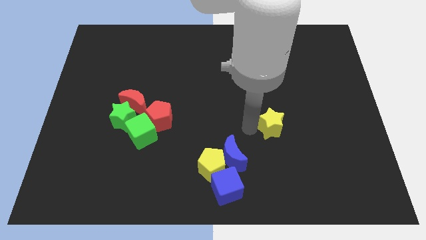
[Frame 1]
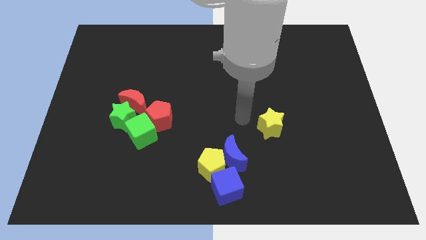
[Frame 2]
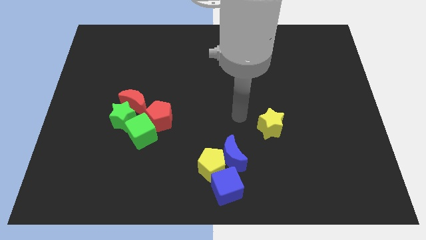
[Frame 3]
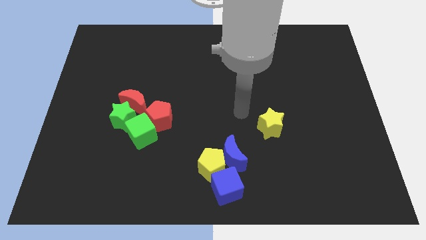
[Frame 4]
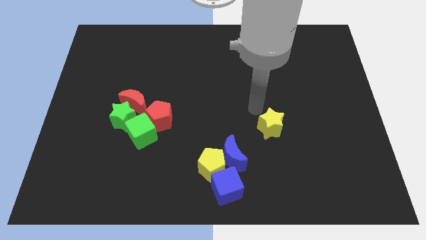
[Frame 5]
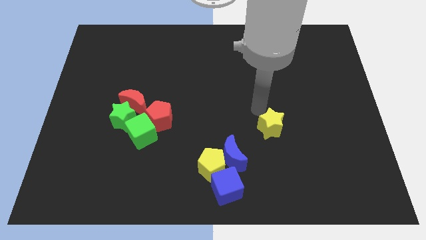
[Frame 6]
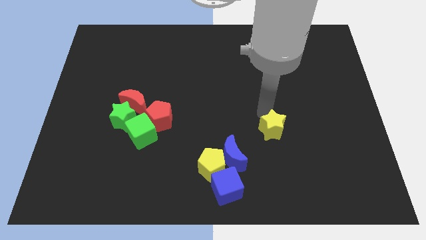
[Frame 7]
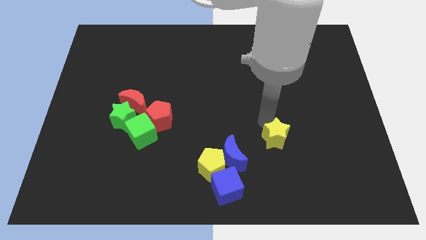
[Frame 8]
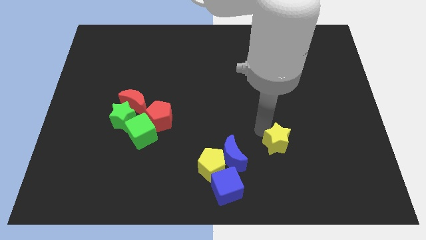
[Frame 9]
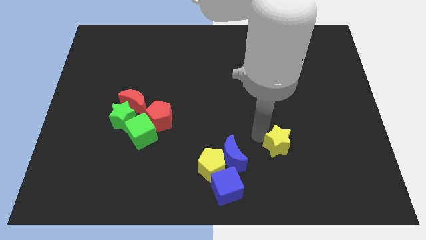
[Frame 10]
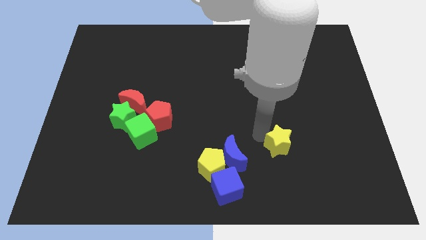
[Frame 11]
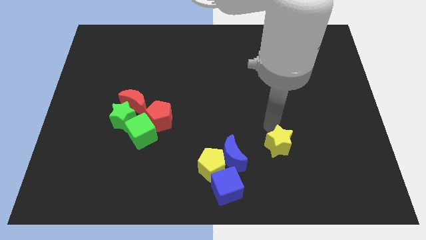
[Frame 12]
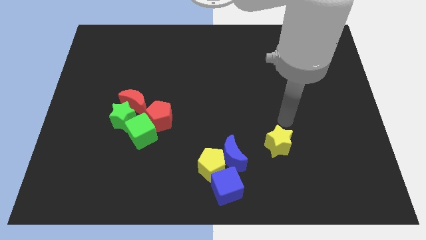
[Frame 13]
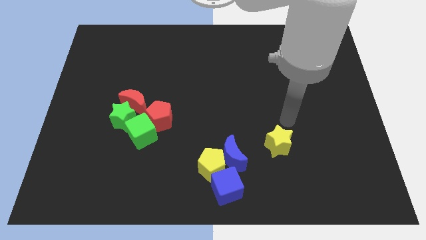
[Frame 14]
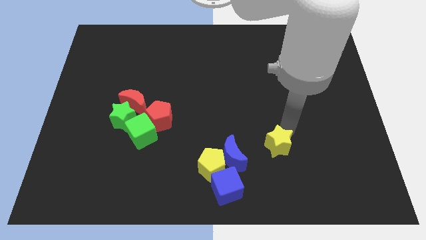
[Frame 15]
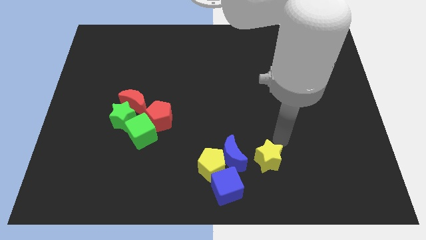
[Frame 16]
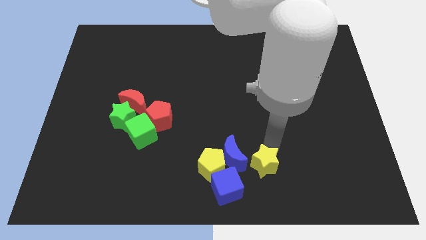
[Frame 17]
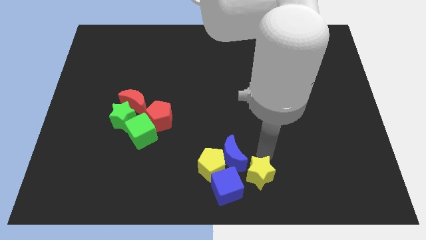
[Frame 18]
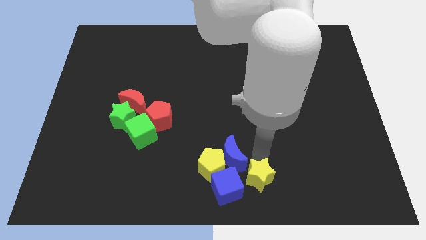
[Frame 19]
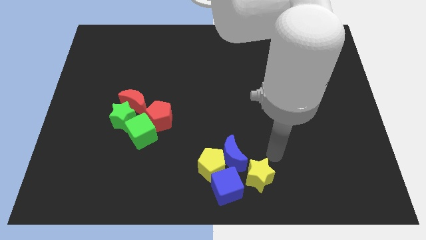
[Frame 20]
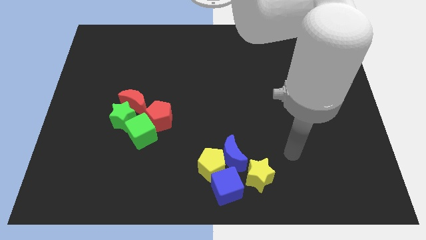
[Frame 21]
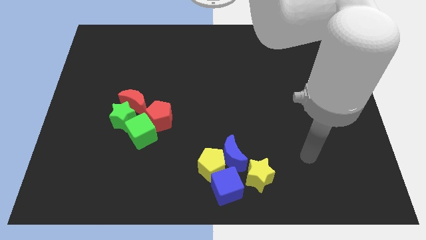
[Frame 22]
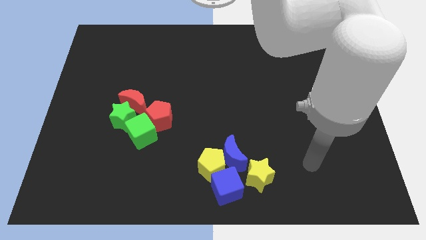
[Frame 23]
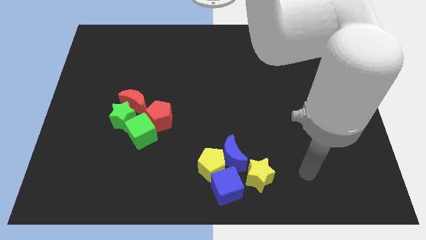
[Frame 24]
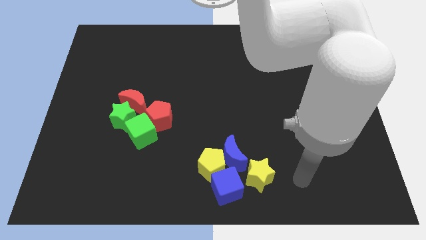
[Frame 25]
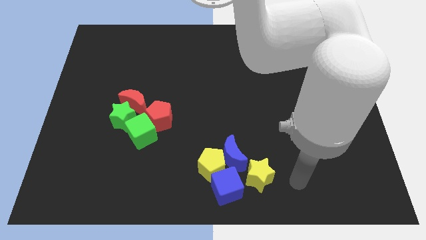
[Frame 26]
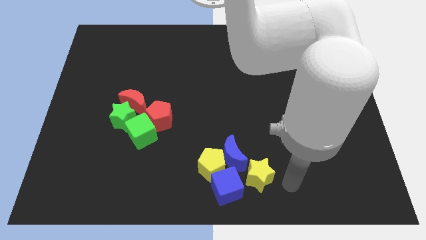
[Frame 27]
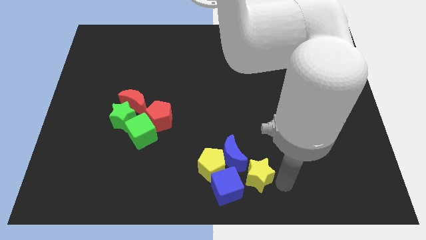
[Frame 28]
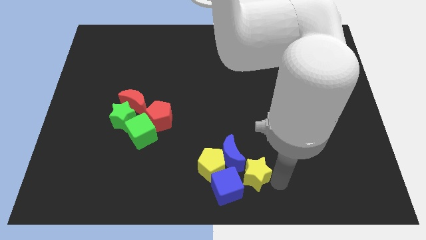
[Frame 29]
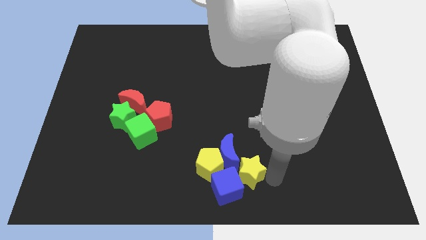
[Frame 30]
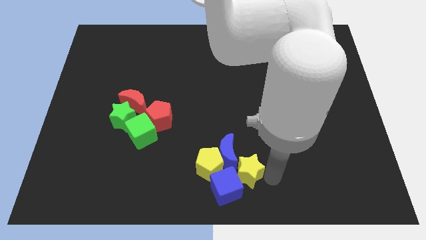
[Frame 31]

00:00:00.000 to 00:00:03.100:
add the yellow star to the group of blue blocks and yellow pentagon

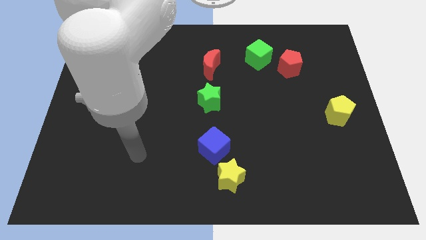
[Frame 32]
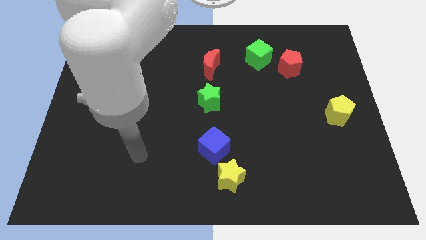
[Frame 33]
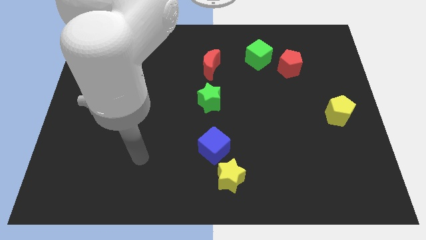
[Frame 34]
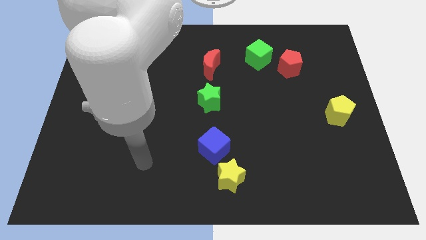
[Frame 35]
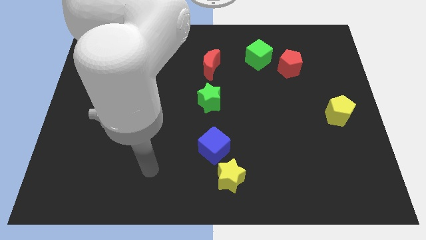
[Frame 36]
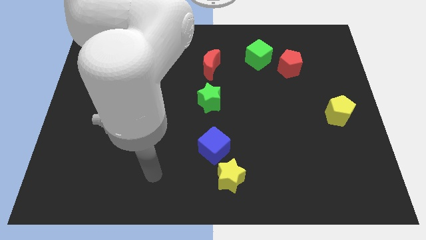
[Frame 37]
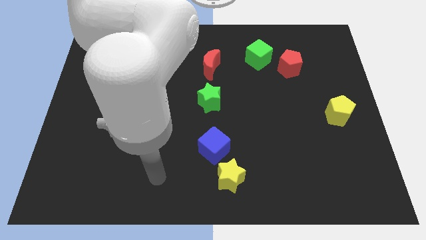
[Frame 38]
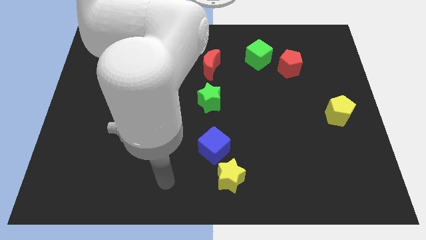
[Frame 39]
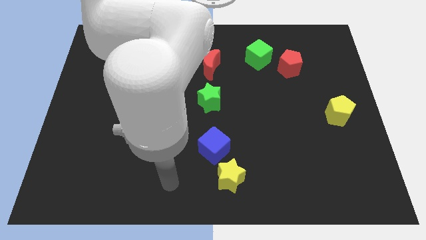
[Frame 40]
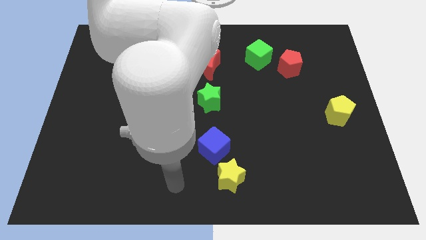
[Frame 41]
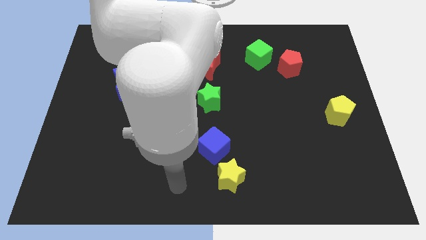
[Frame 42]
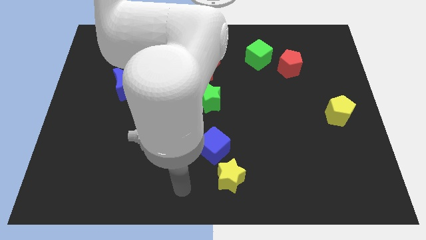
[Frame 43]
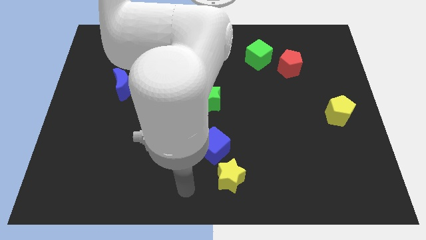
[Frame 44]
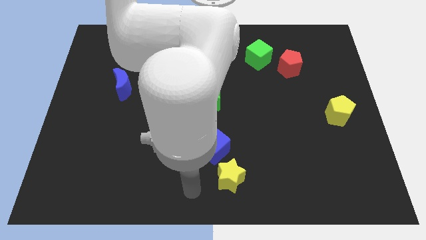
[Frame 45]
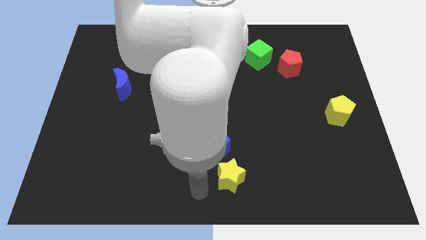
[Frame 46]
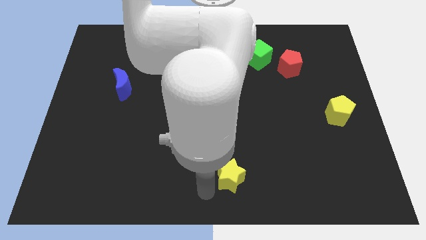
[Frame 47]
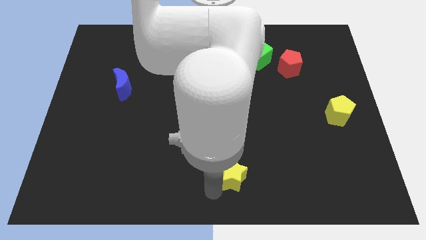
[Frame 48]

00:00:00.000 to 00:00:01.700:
move your arm to the left side of the yellow star

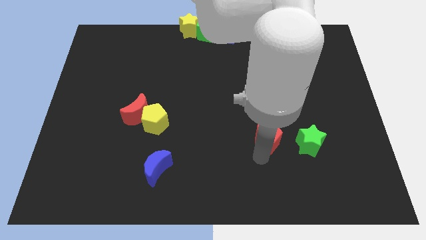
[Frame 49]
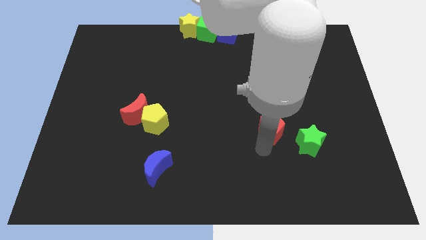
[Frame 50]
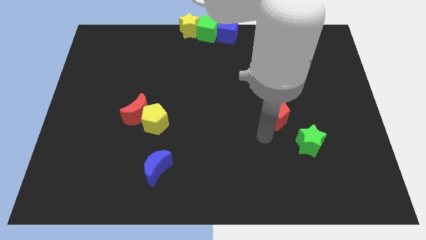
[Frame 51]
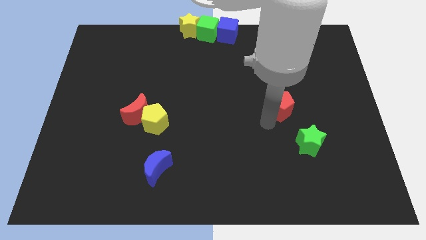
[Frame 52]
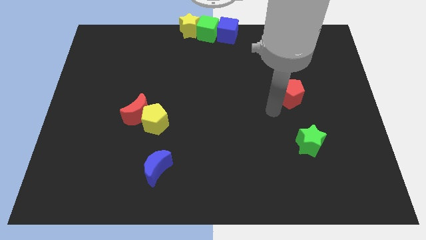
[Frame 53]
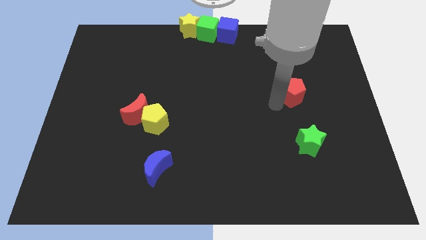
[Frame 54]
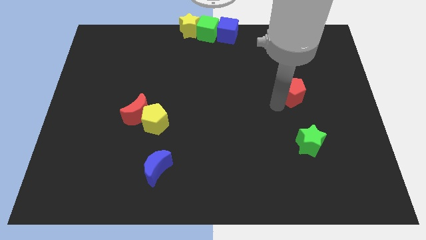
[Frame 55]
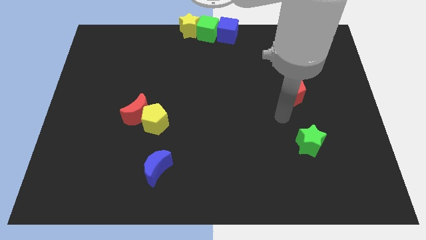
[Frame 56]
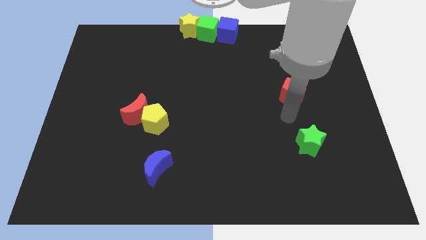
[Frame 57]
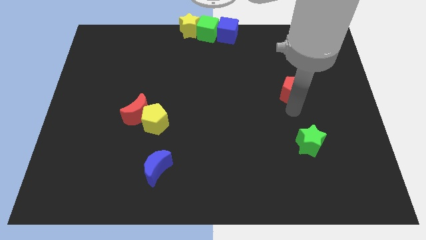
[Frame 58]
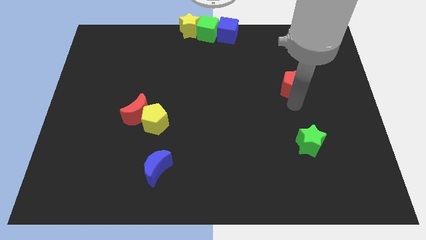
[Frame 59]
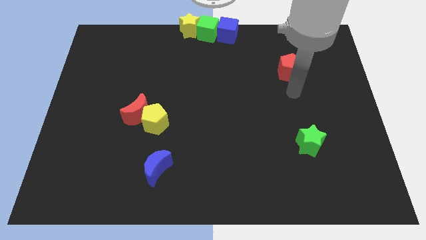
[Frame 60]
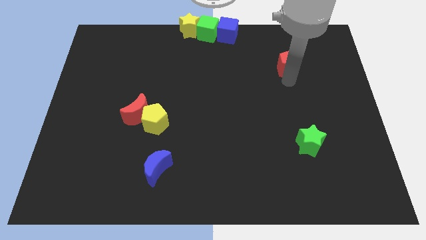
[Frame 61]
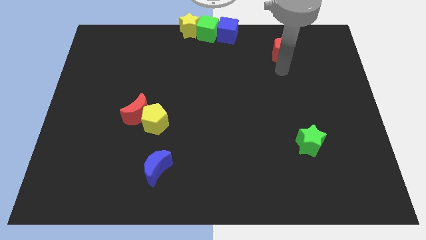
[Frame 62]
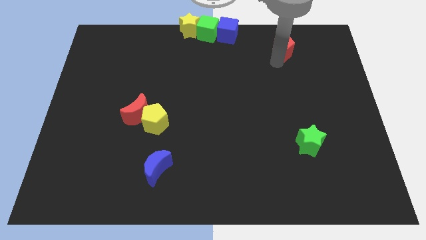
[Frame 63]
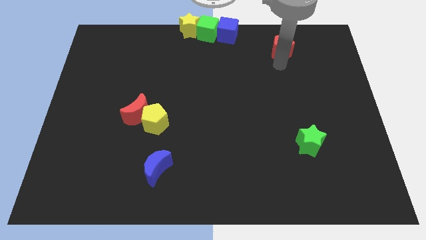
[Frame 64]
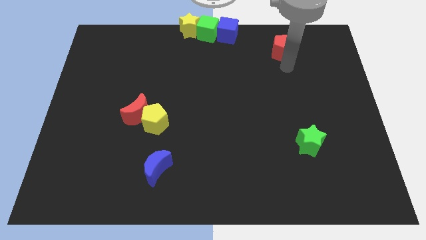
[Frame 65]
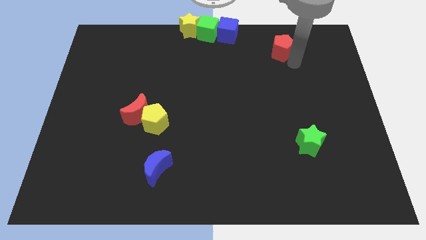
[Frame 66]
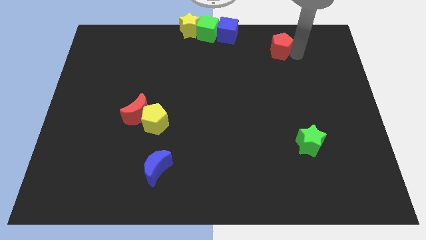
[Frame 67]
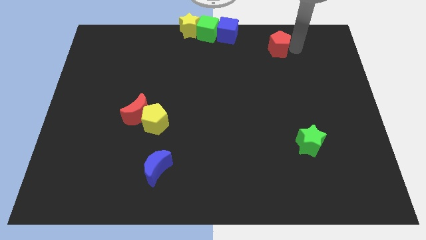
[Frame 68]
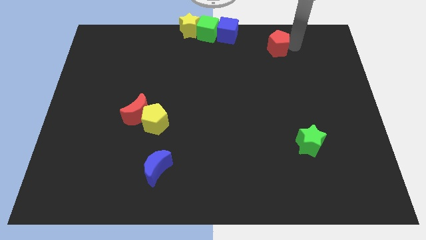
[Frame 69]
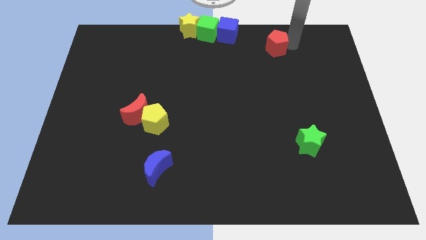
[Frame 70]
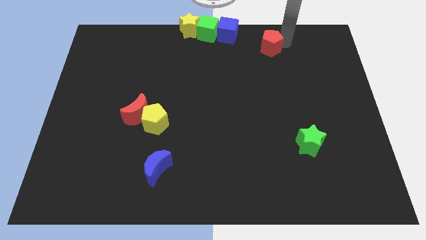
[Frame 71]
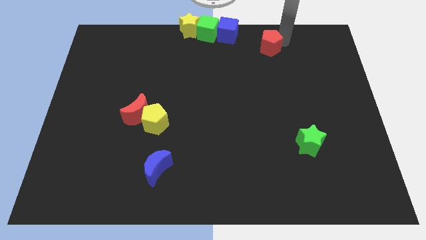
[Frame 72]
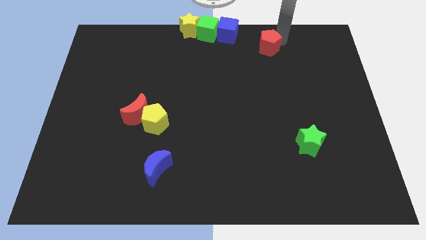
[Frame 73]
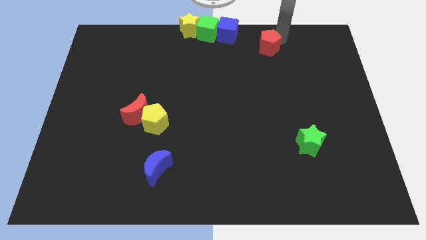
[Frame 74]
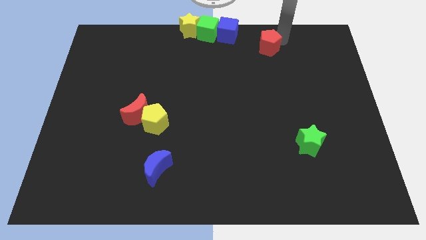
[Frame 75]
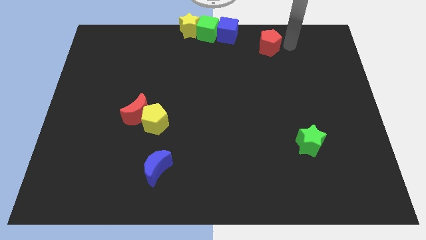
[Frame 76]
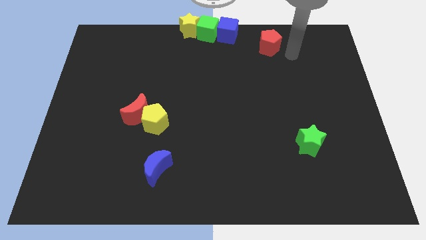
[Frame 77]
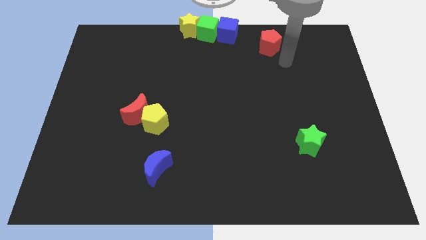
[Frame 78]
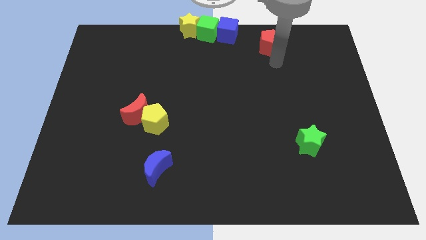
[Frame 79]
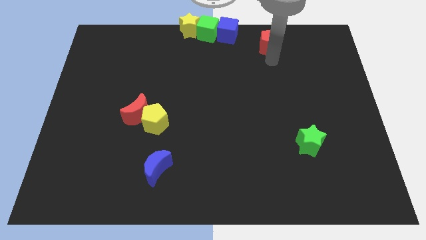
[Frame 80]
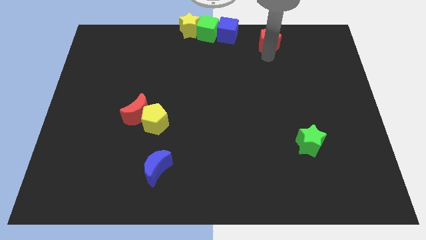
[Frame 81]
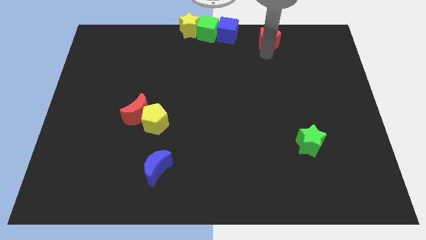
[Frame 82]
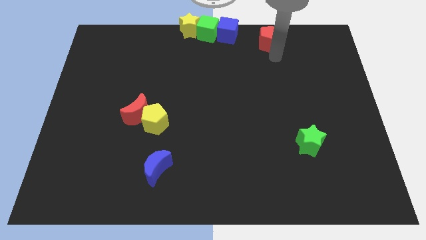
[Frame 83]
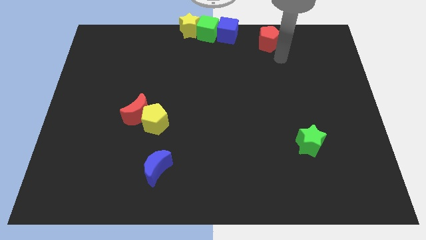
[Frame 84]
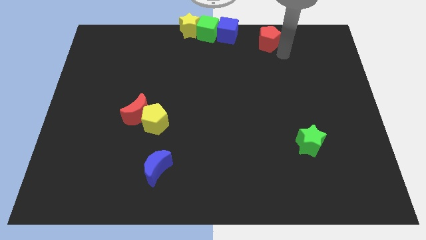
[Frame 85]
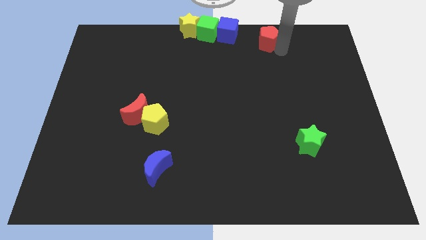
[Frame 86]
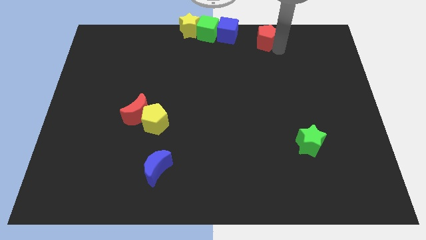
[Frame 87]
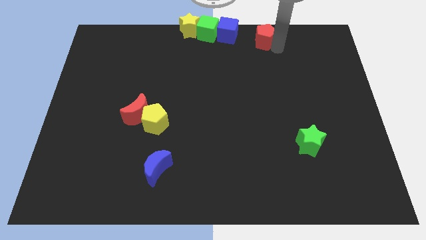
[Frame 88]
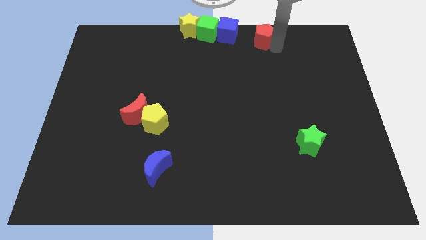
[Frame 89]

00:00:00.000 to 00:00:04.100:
move red pentagon to the left of blue cube

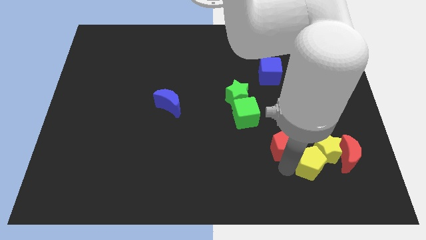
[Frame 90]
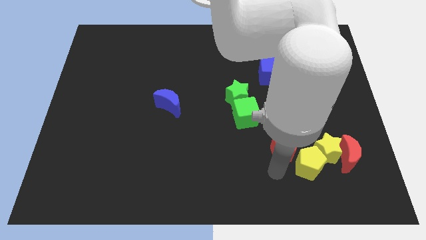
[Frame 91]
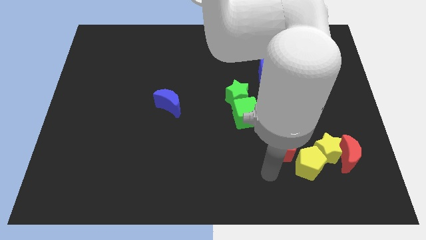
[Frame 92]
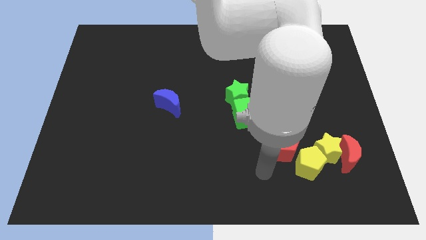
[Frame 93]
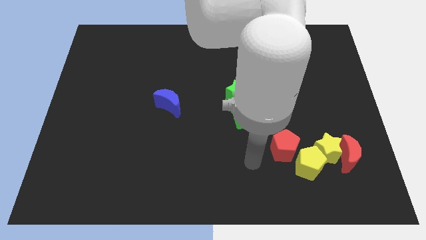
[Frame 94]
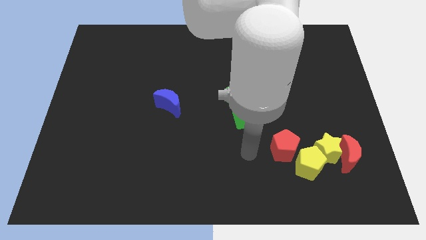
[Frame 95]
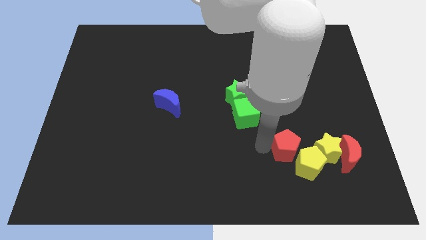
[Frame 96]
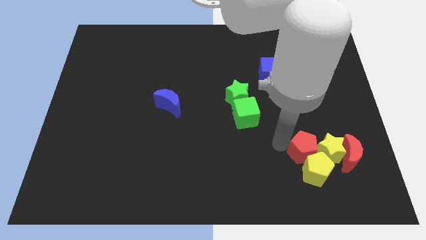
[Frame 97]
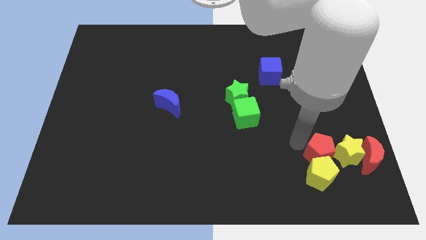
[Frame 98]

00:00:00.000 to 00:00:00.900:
push the red pentagon into the group of blocks
